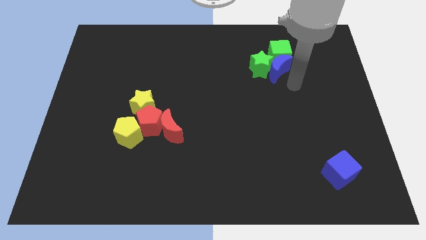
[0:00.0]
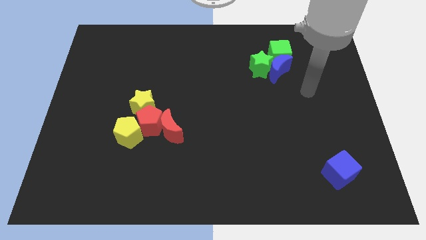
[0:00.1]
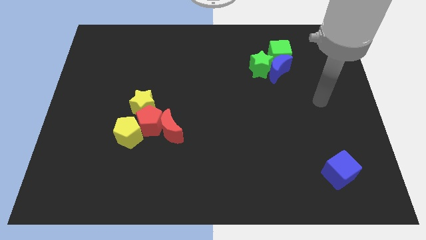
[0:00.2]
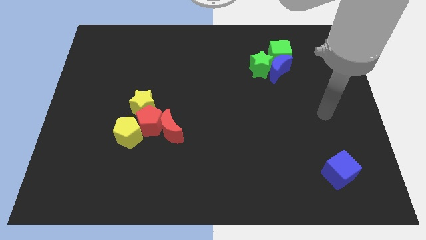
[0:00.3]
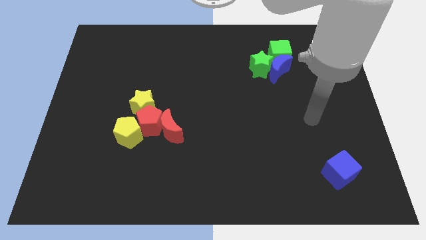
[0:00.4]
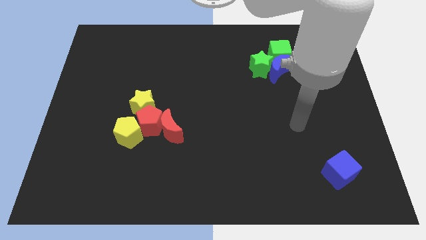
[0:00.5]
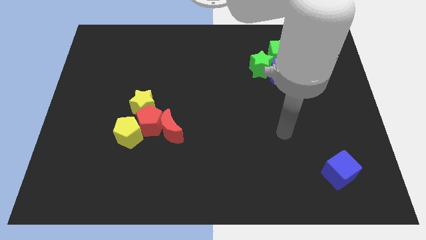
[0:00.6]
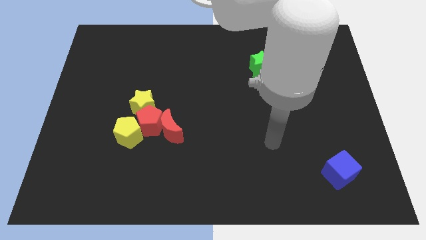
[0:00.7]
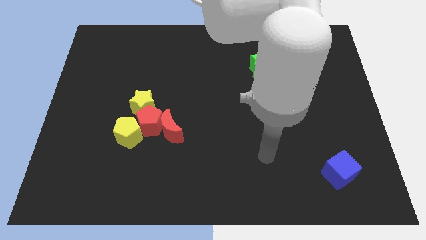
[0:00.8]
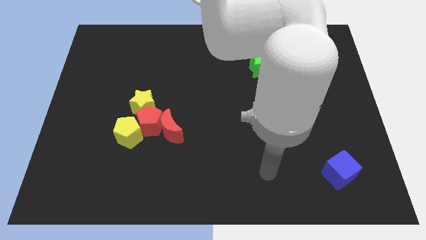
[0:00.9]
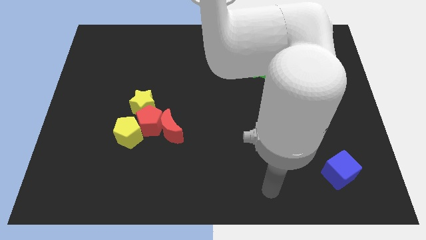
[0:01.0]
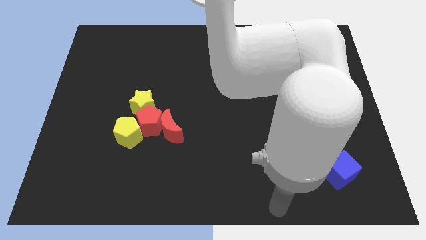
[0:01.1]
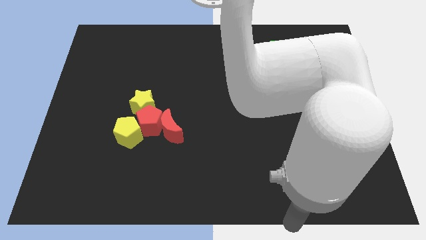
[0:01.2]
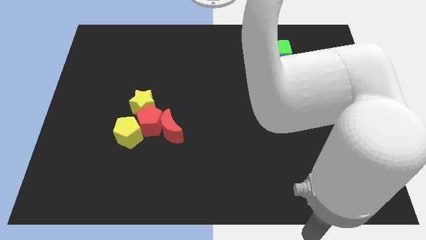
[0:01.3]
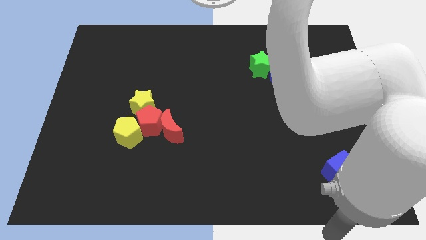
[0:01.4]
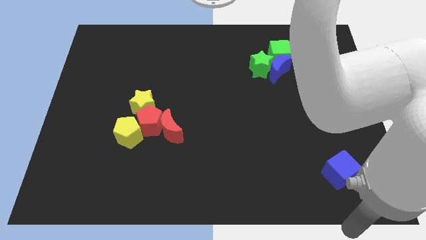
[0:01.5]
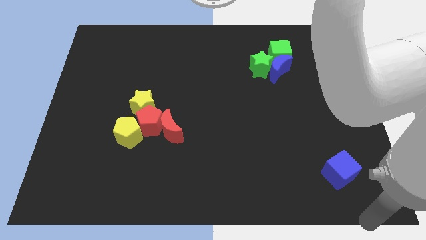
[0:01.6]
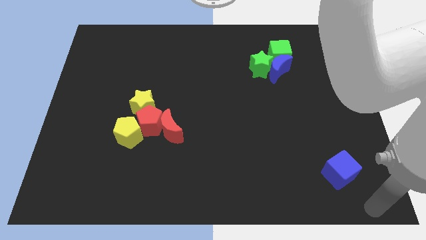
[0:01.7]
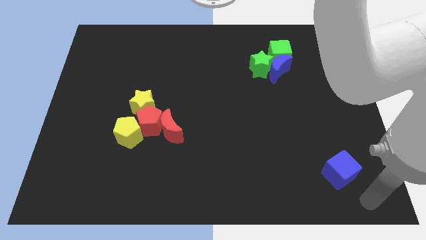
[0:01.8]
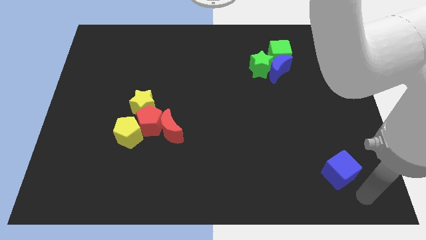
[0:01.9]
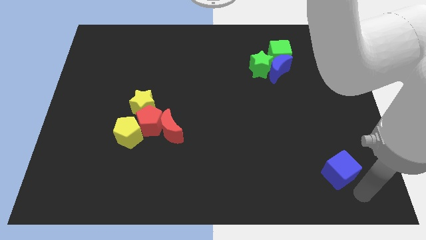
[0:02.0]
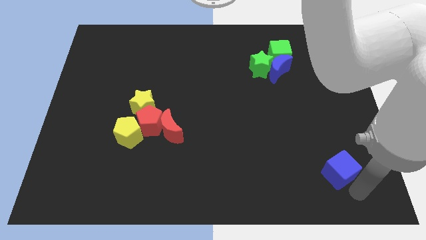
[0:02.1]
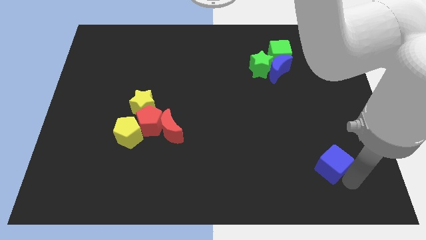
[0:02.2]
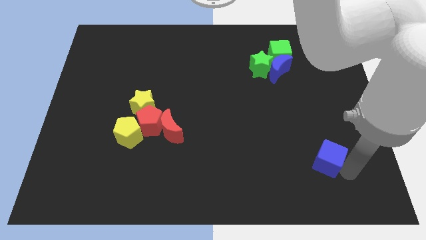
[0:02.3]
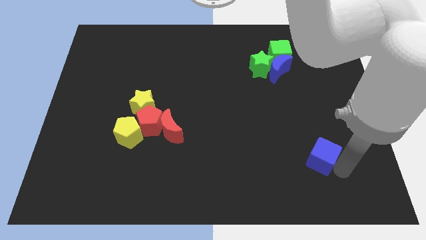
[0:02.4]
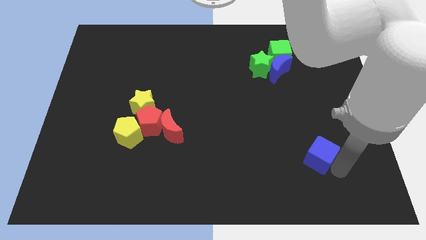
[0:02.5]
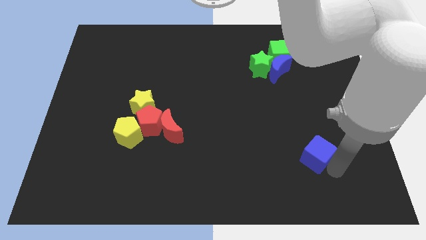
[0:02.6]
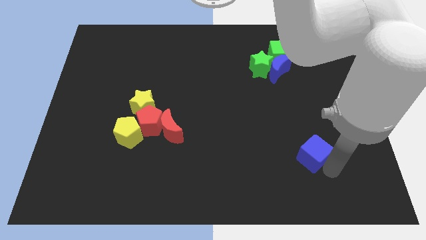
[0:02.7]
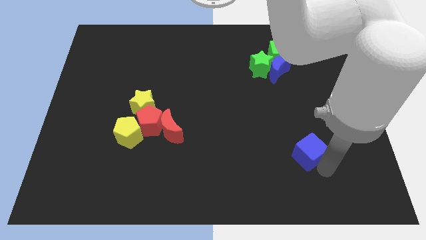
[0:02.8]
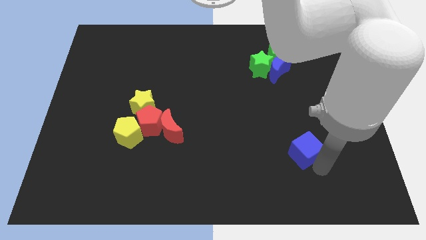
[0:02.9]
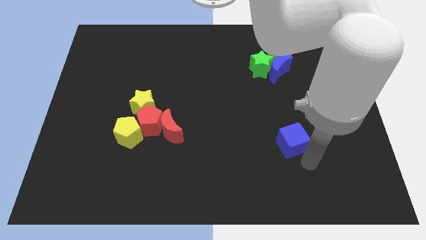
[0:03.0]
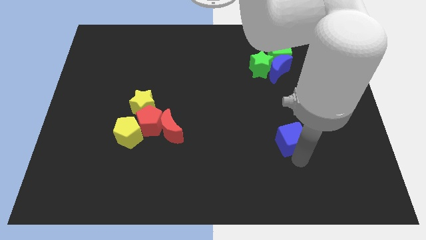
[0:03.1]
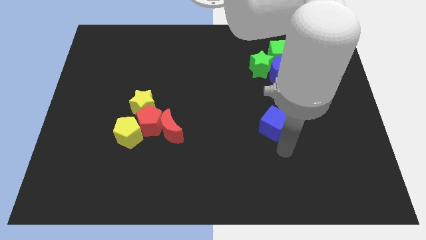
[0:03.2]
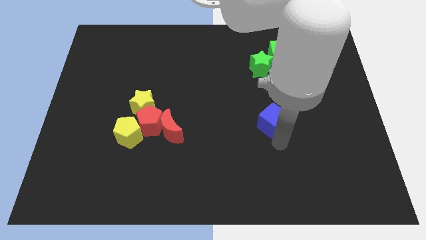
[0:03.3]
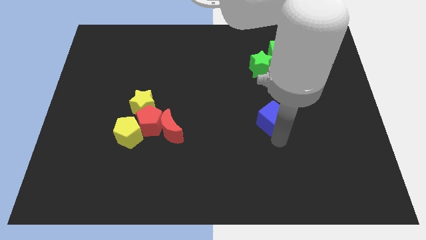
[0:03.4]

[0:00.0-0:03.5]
move the blue cube to the center of the board

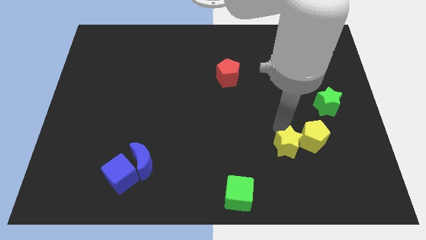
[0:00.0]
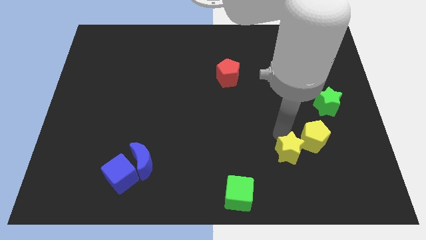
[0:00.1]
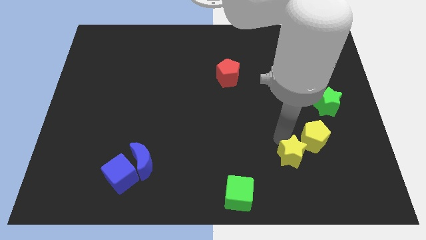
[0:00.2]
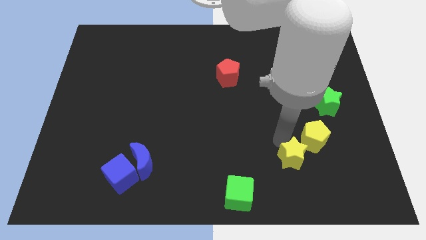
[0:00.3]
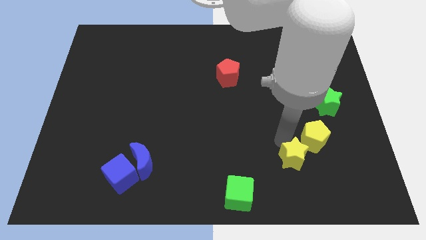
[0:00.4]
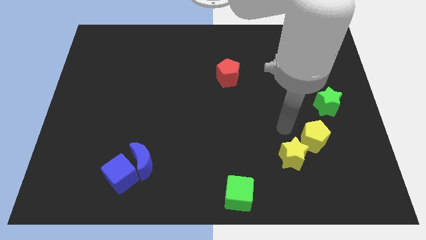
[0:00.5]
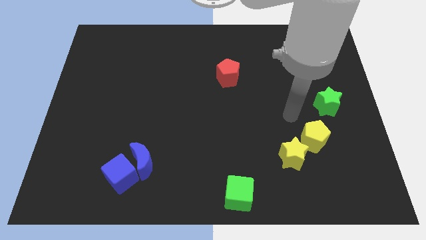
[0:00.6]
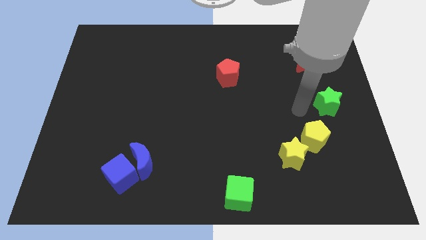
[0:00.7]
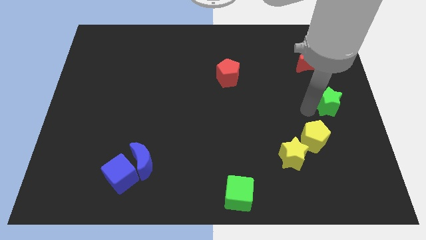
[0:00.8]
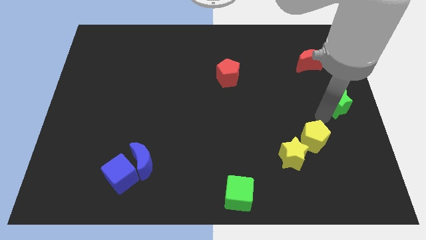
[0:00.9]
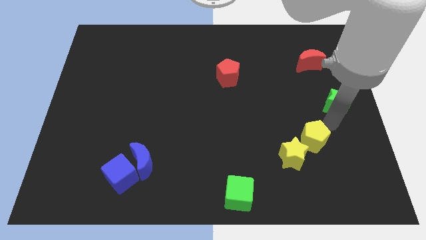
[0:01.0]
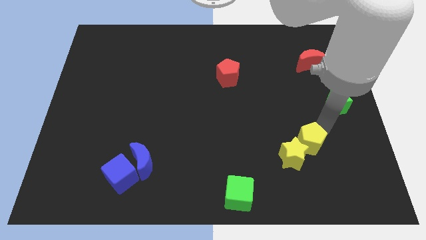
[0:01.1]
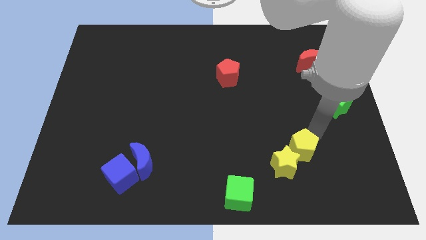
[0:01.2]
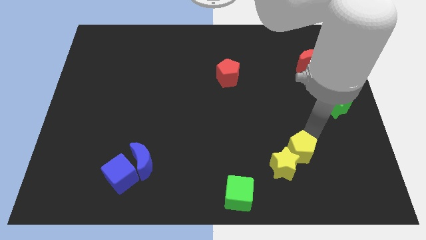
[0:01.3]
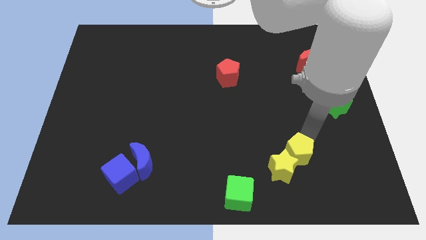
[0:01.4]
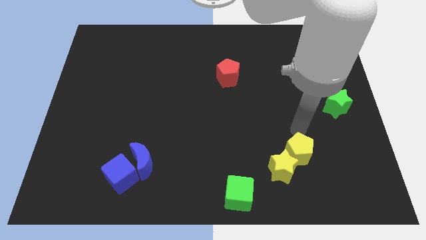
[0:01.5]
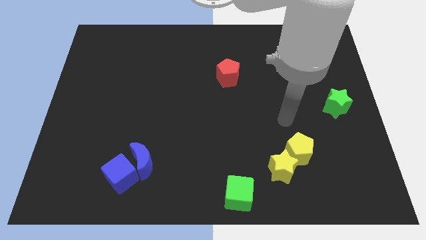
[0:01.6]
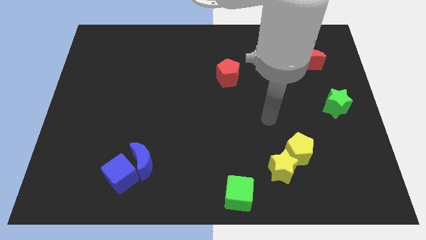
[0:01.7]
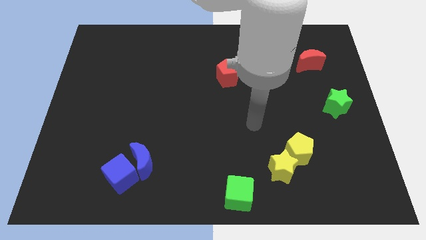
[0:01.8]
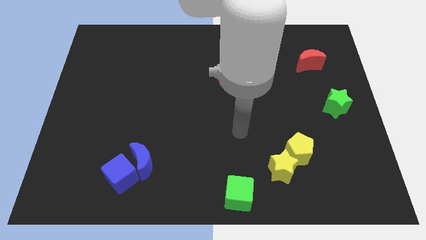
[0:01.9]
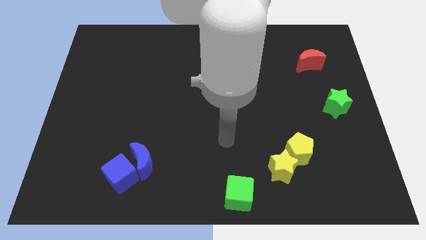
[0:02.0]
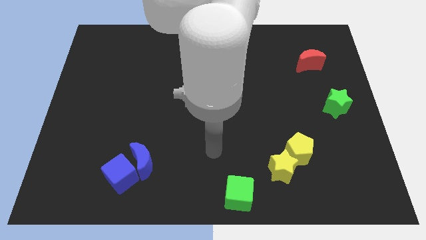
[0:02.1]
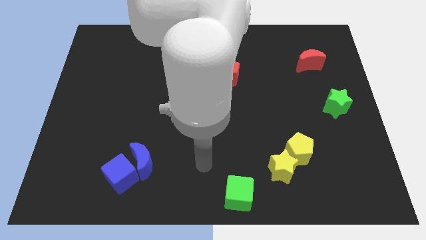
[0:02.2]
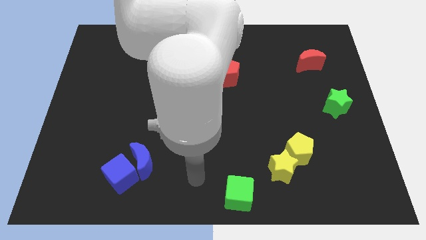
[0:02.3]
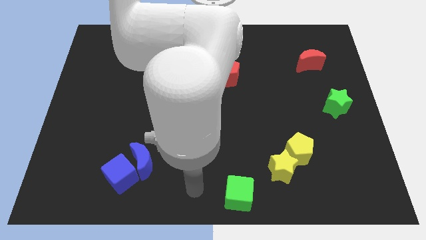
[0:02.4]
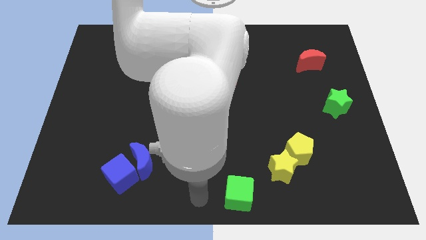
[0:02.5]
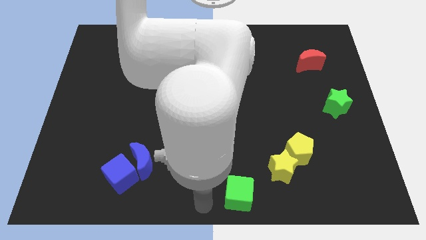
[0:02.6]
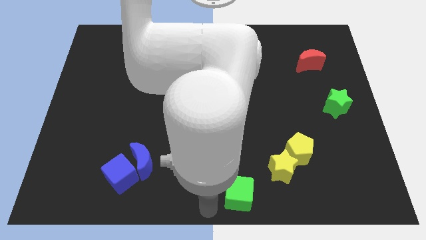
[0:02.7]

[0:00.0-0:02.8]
push the yellow pentagon into the yellow star

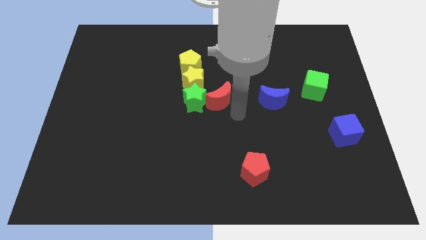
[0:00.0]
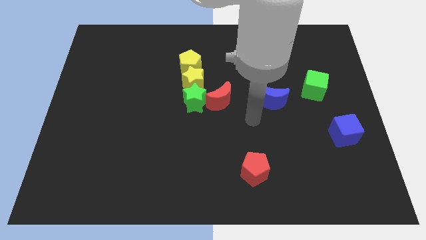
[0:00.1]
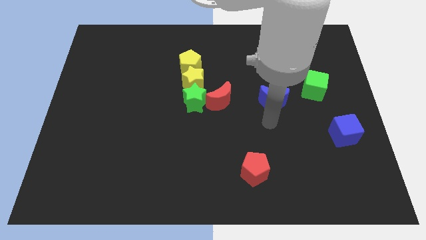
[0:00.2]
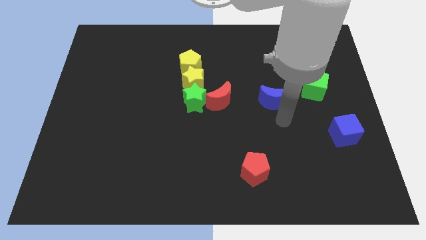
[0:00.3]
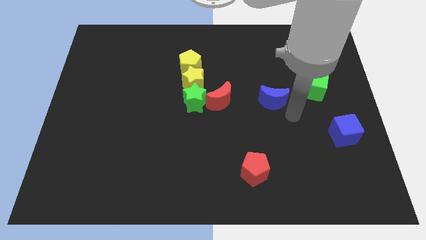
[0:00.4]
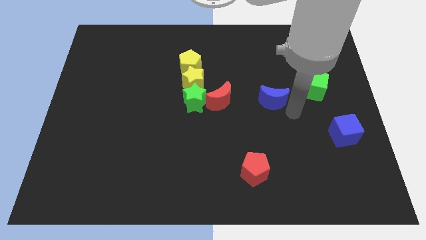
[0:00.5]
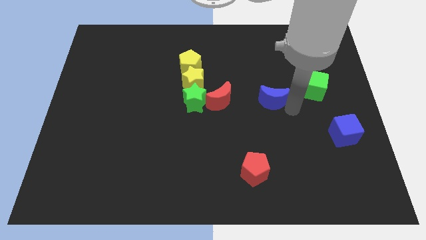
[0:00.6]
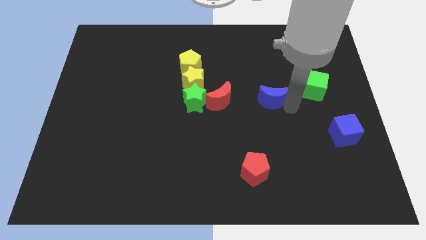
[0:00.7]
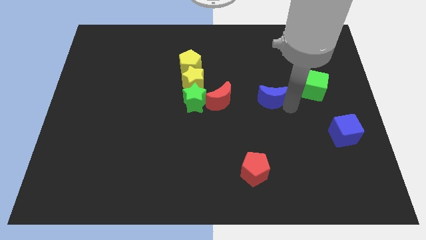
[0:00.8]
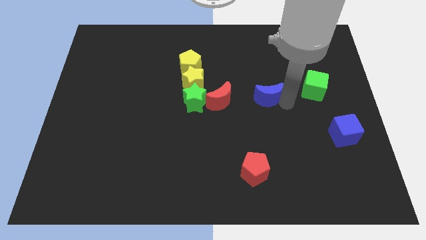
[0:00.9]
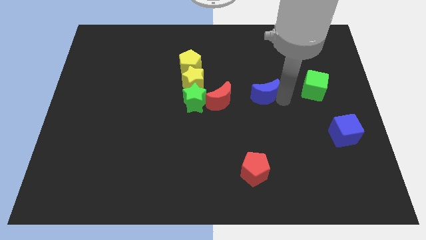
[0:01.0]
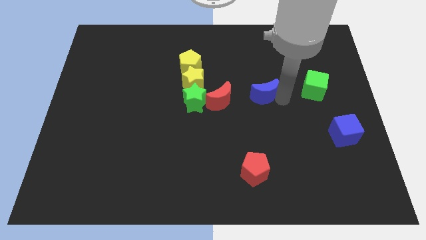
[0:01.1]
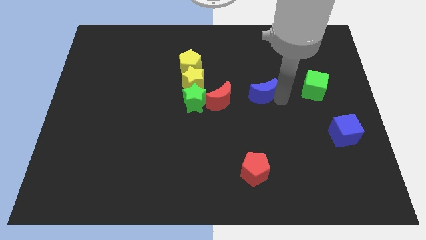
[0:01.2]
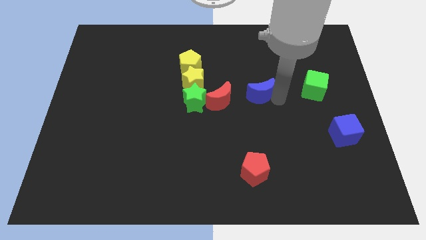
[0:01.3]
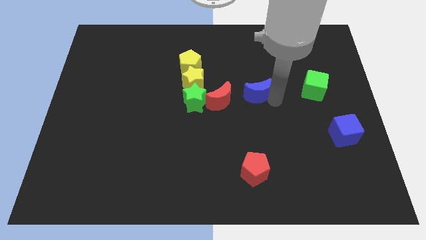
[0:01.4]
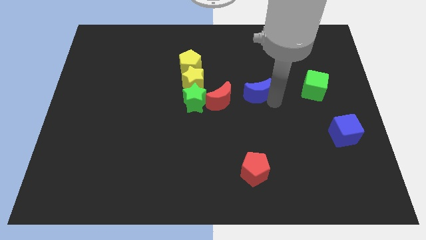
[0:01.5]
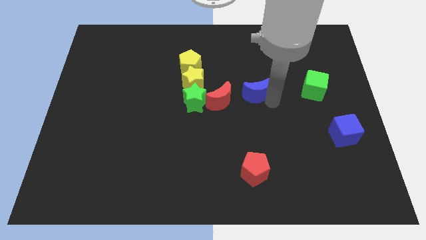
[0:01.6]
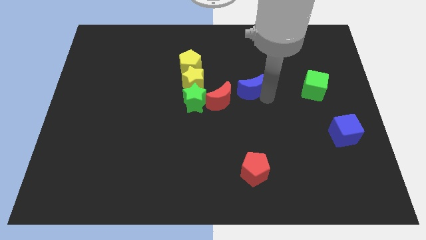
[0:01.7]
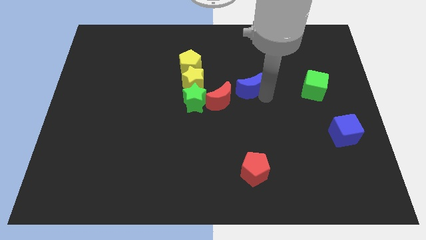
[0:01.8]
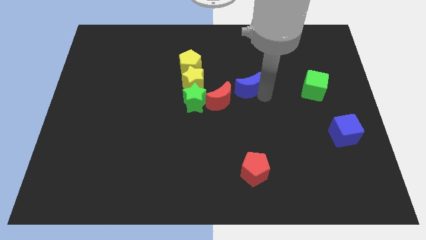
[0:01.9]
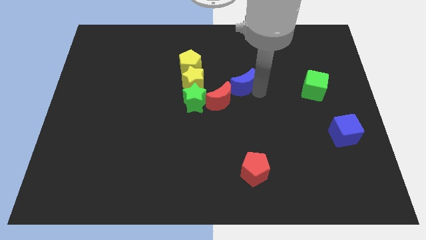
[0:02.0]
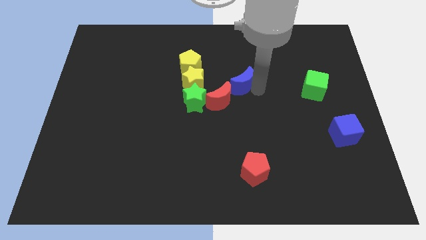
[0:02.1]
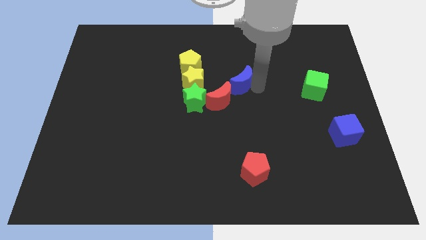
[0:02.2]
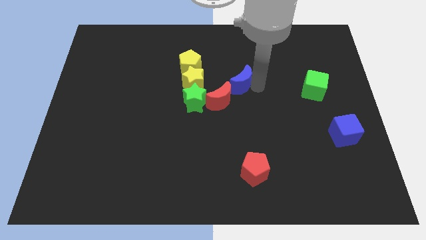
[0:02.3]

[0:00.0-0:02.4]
place the blue moon parallel to green cube

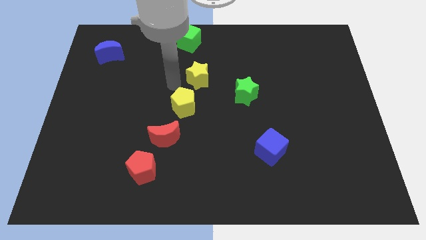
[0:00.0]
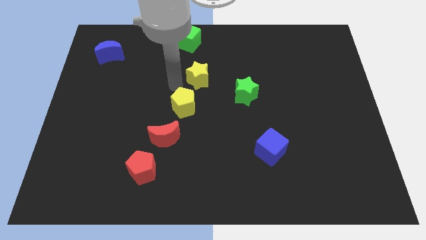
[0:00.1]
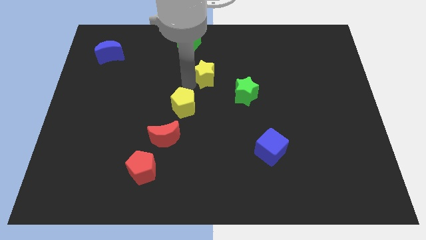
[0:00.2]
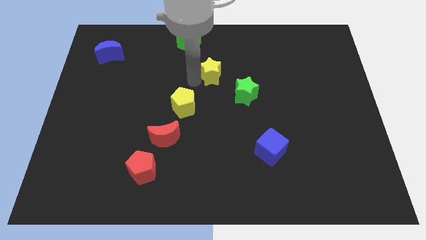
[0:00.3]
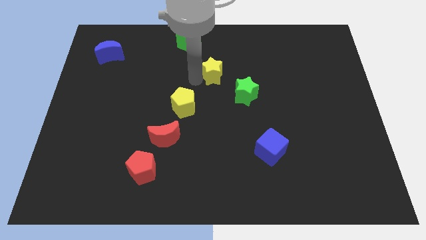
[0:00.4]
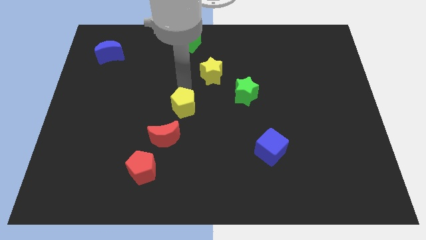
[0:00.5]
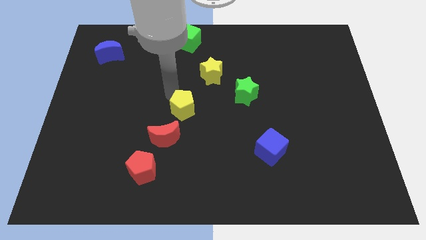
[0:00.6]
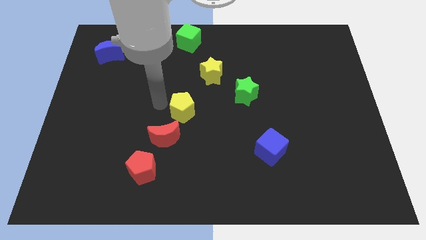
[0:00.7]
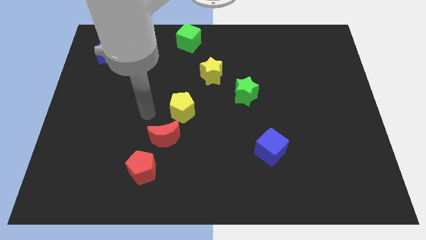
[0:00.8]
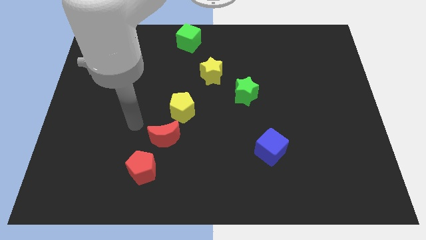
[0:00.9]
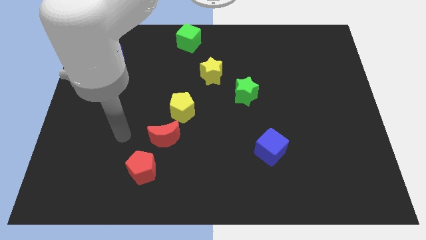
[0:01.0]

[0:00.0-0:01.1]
separate yellow blocks from each other
